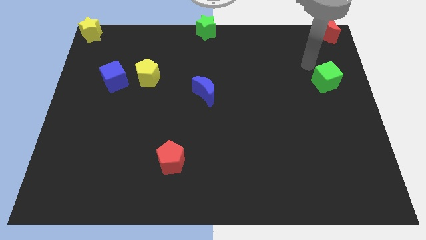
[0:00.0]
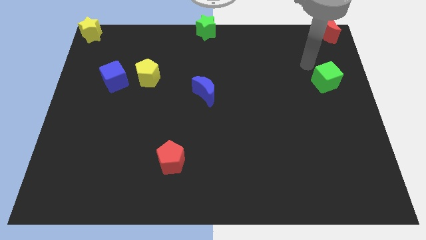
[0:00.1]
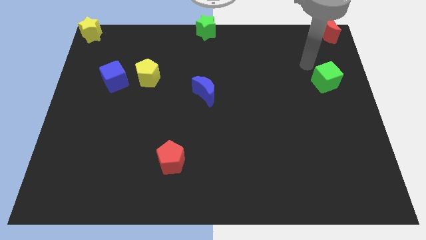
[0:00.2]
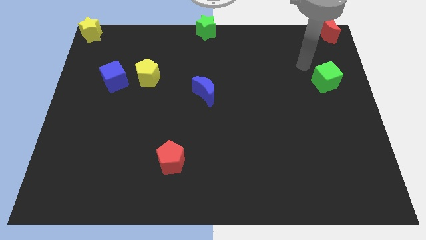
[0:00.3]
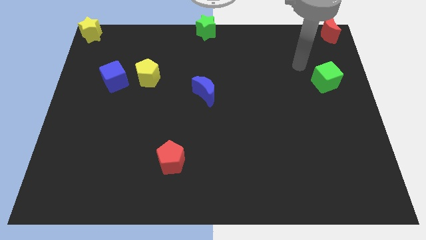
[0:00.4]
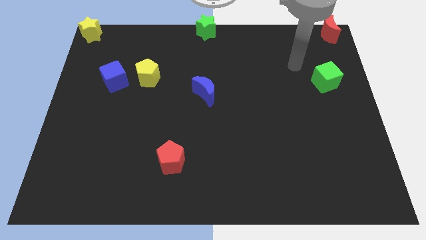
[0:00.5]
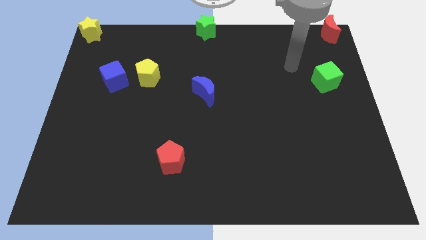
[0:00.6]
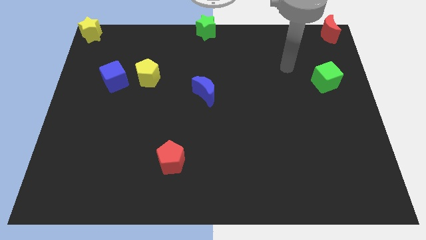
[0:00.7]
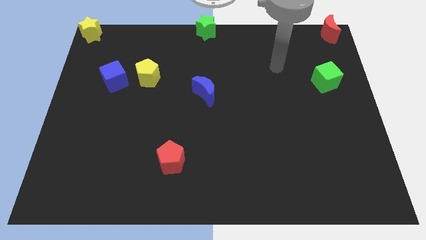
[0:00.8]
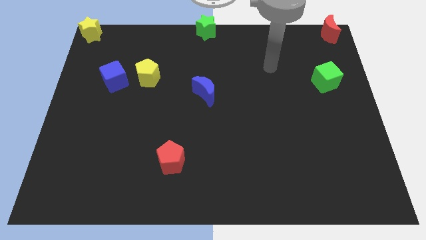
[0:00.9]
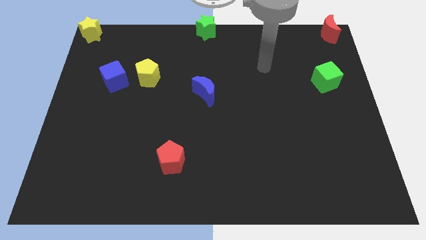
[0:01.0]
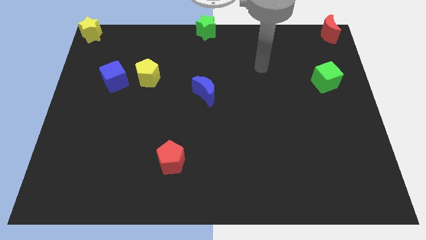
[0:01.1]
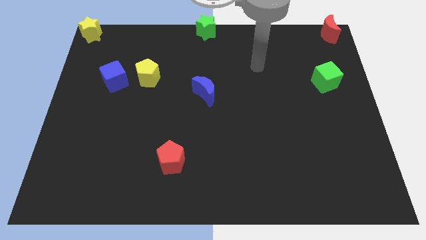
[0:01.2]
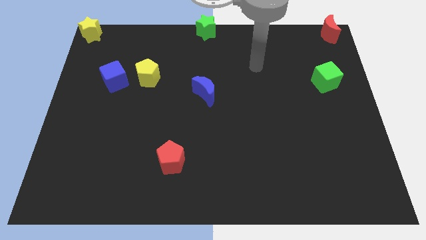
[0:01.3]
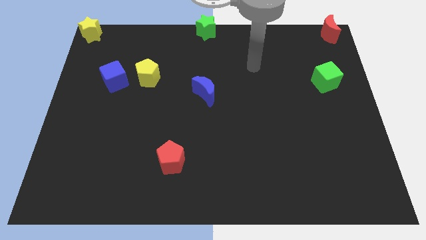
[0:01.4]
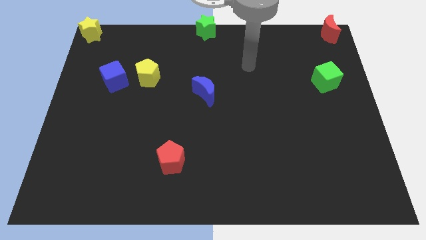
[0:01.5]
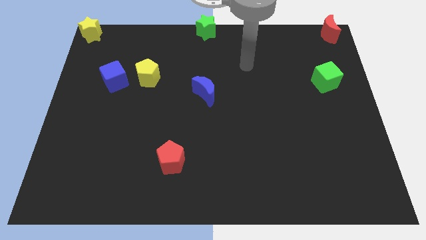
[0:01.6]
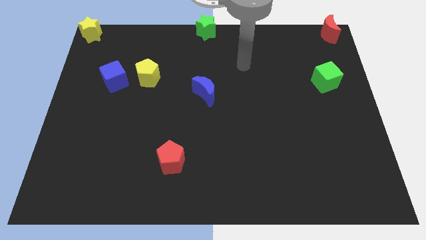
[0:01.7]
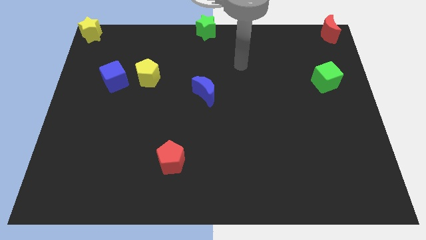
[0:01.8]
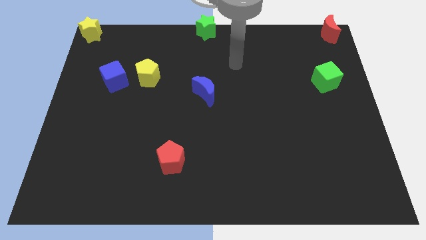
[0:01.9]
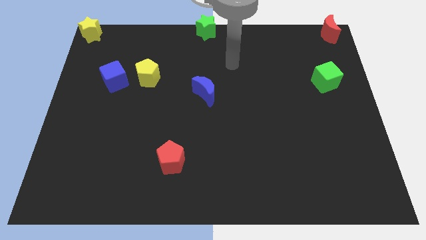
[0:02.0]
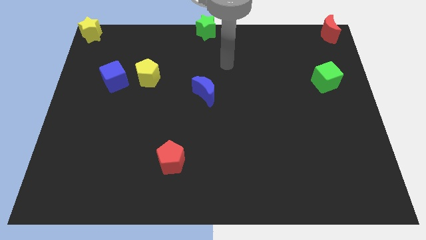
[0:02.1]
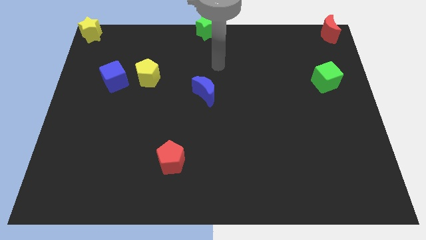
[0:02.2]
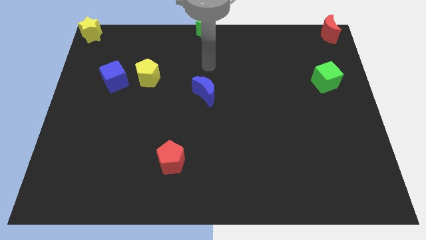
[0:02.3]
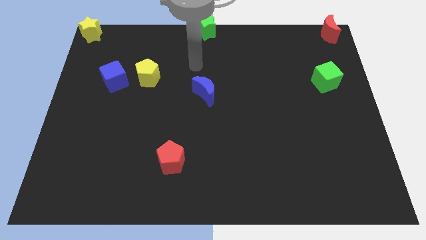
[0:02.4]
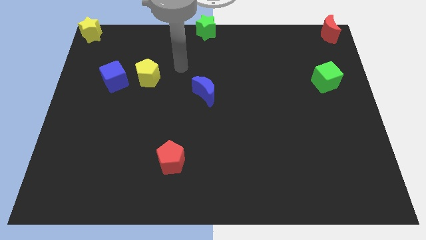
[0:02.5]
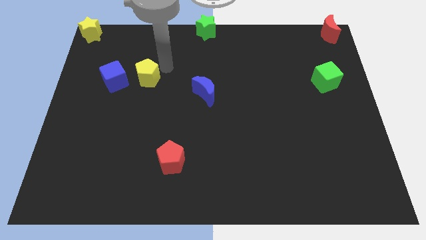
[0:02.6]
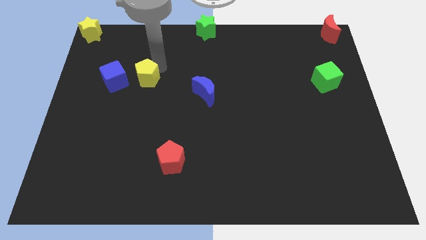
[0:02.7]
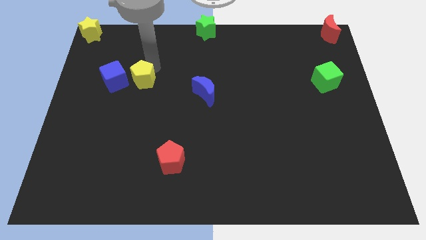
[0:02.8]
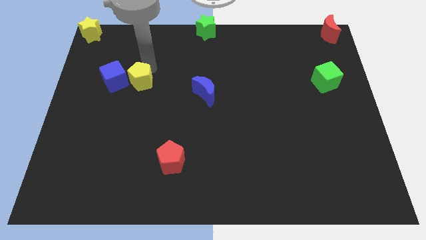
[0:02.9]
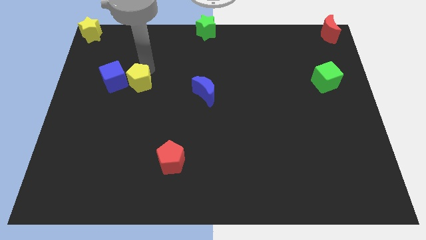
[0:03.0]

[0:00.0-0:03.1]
push yellow pentagon to blue cube

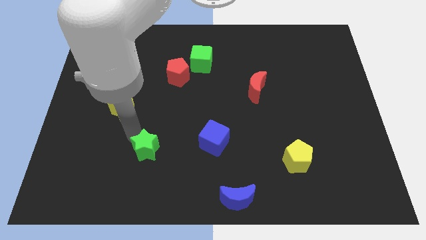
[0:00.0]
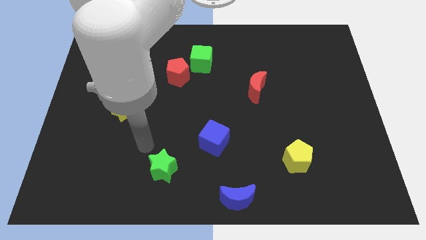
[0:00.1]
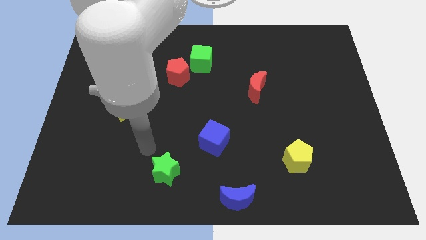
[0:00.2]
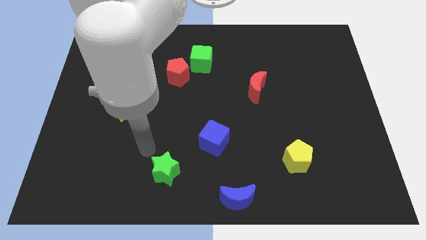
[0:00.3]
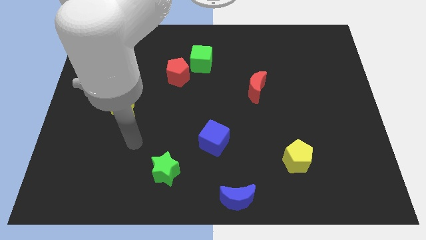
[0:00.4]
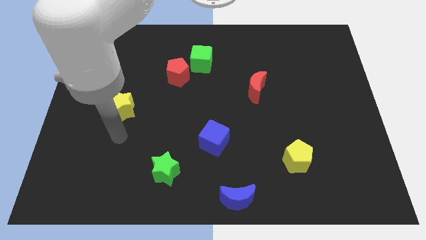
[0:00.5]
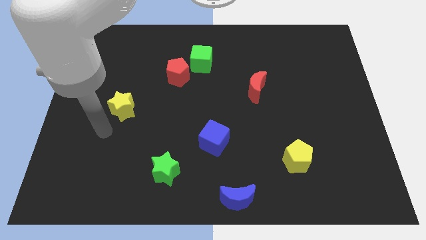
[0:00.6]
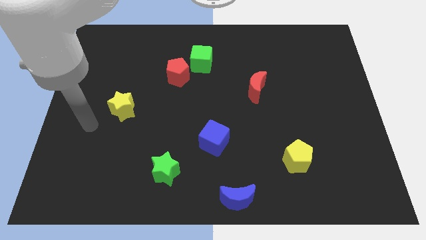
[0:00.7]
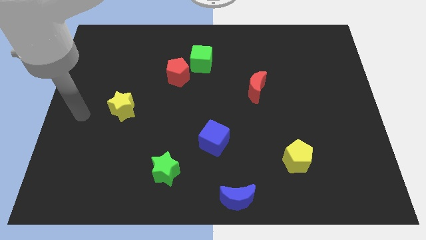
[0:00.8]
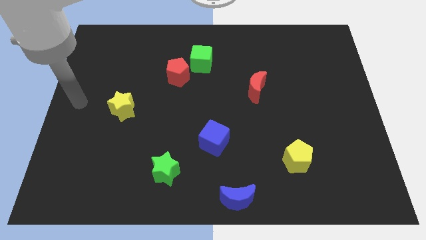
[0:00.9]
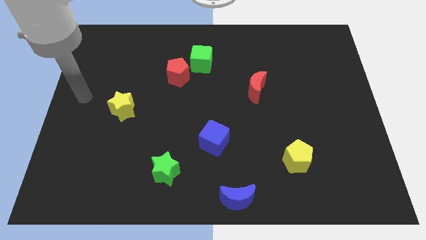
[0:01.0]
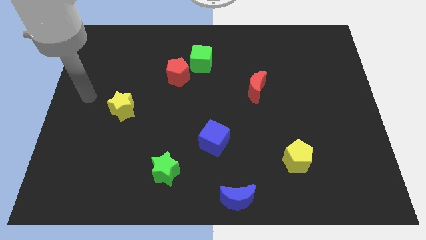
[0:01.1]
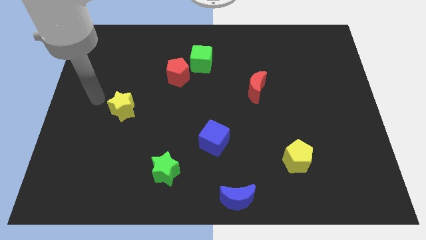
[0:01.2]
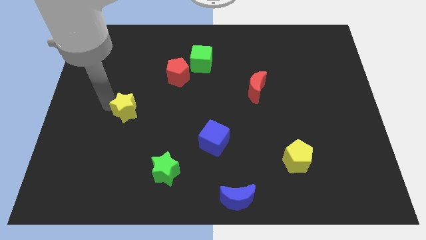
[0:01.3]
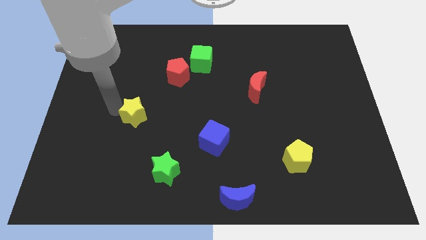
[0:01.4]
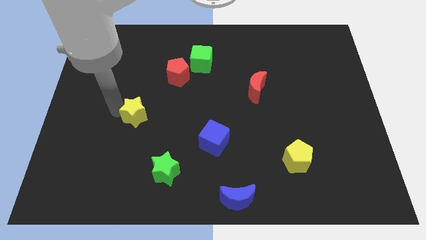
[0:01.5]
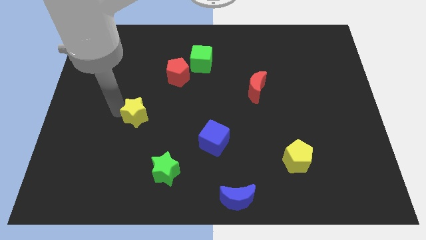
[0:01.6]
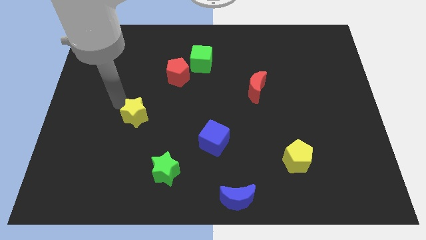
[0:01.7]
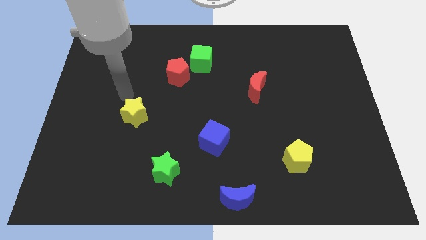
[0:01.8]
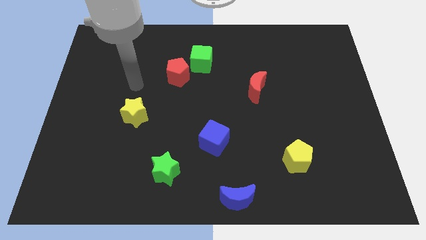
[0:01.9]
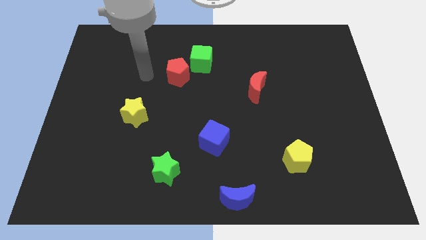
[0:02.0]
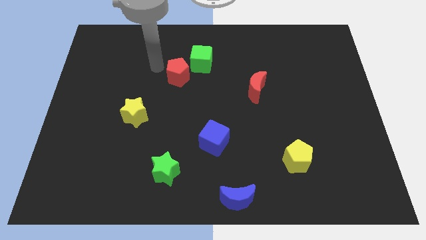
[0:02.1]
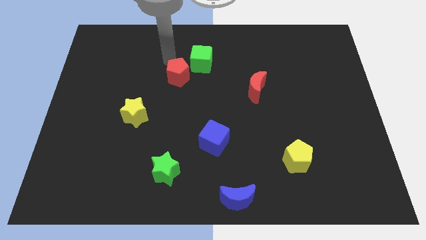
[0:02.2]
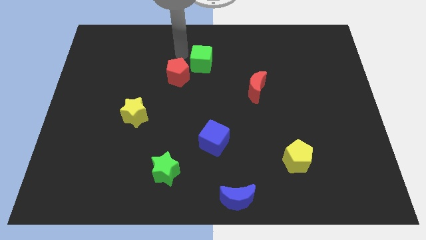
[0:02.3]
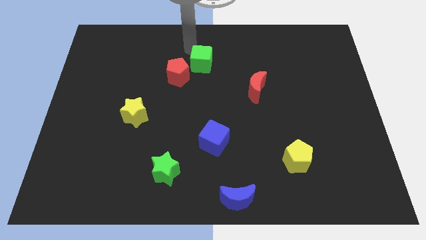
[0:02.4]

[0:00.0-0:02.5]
move yellow star slightly towards its bottom

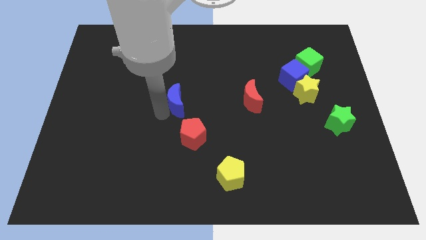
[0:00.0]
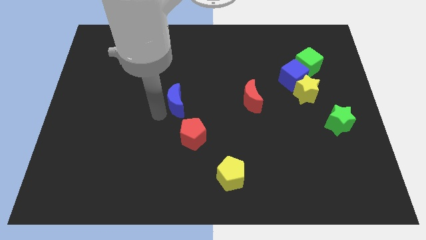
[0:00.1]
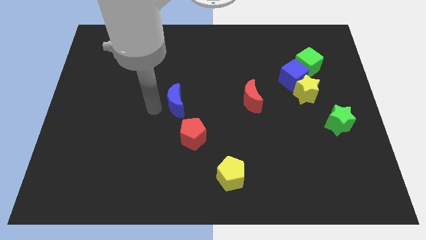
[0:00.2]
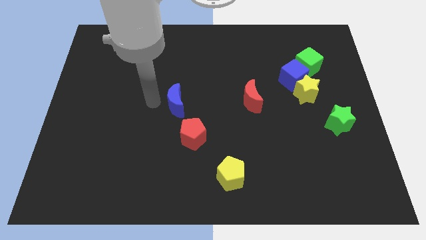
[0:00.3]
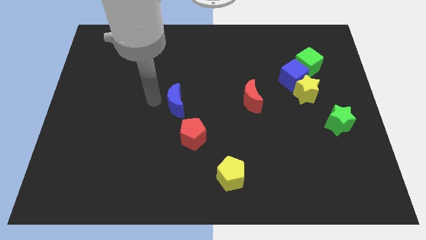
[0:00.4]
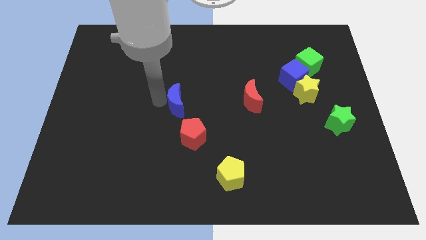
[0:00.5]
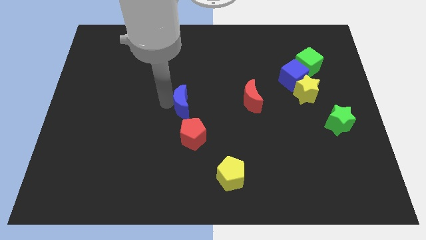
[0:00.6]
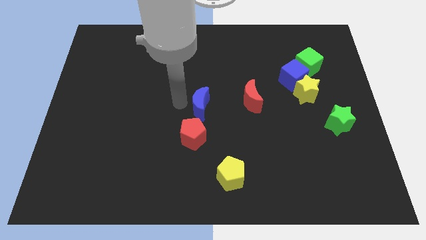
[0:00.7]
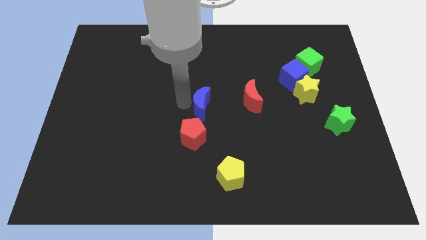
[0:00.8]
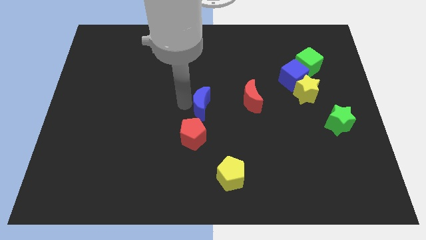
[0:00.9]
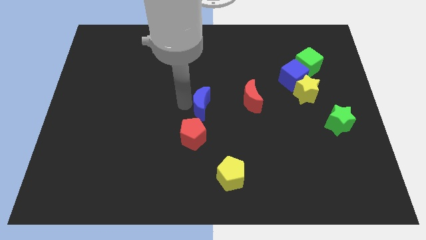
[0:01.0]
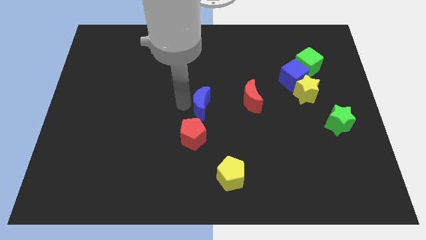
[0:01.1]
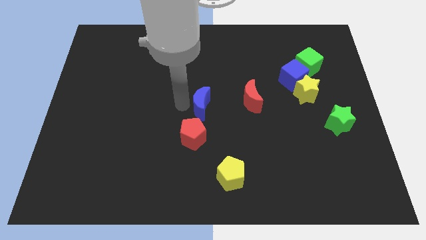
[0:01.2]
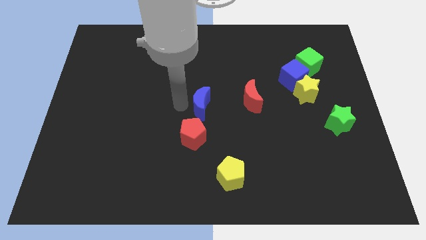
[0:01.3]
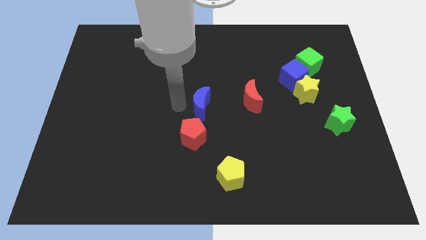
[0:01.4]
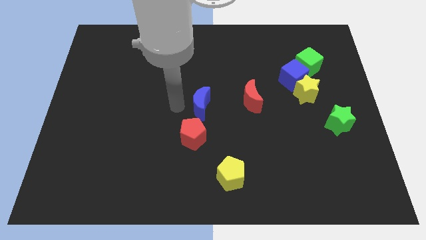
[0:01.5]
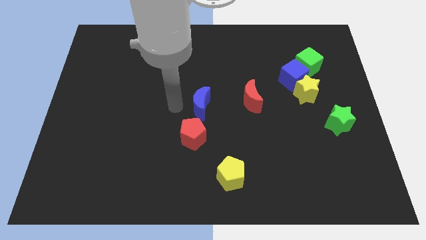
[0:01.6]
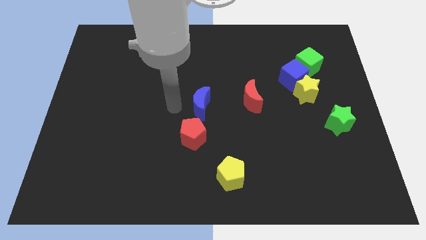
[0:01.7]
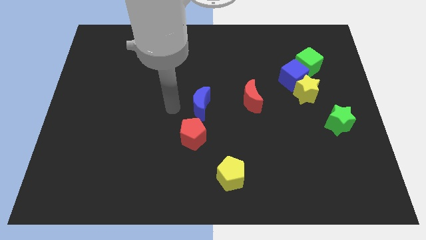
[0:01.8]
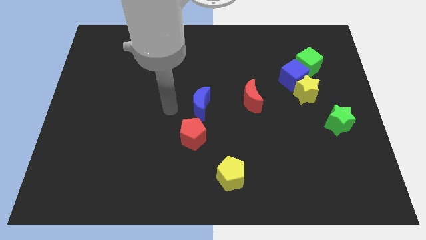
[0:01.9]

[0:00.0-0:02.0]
place the blue crescent on top of red pentagon

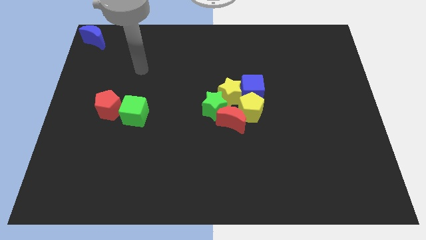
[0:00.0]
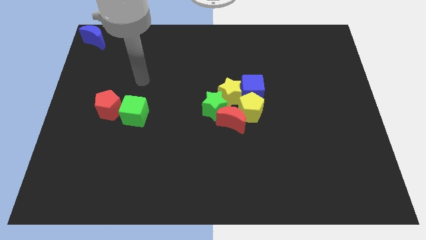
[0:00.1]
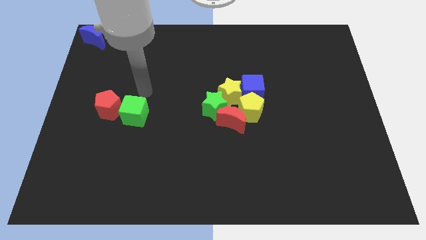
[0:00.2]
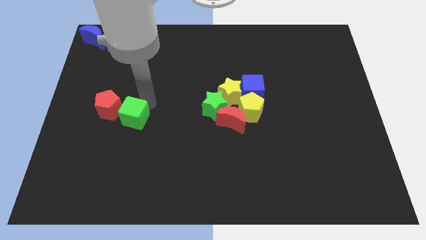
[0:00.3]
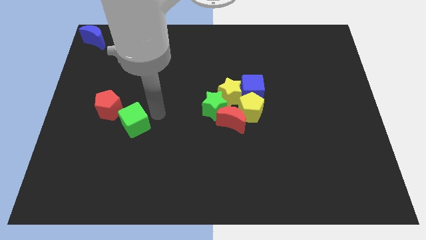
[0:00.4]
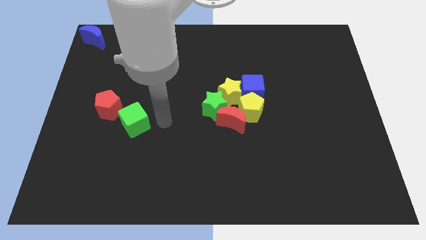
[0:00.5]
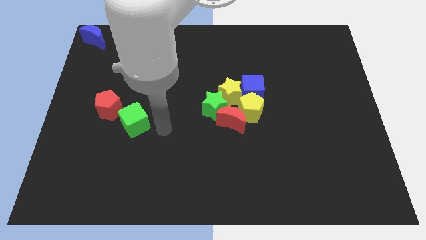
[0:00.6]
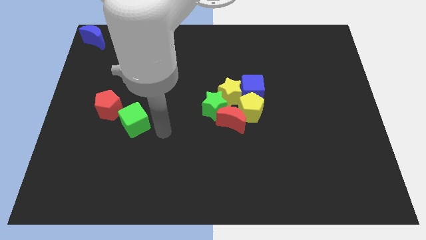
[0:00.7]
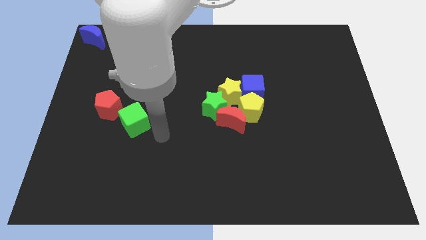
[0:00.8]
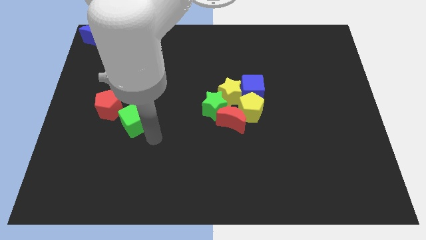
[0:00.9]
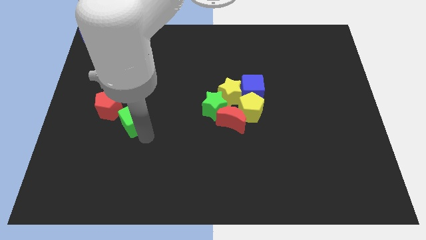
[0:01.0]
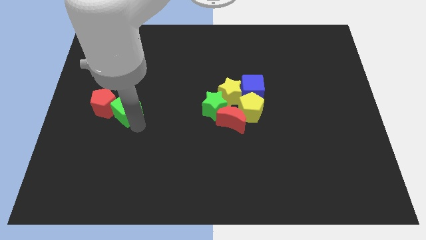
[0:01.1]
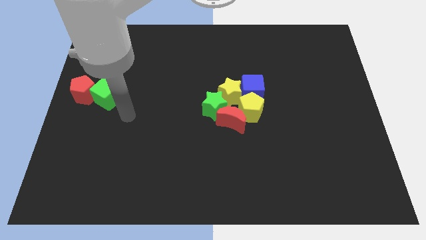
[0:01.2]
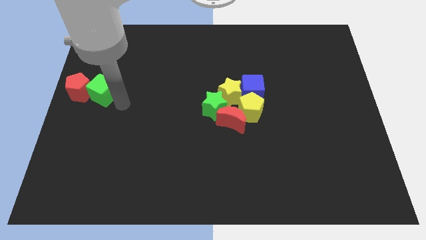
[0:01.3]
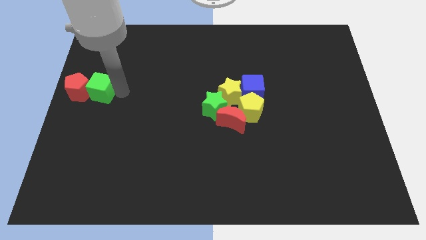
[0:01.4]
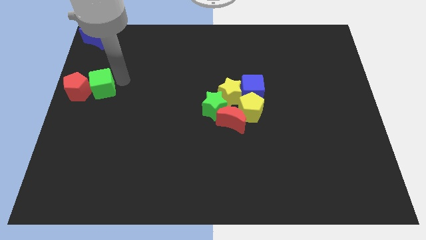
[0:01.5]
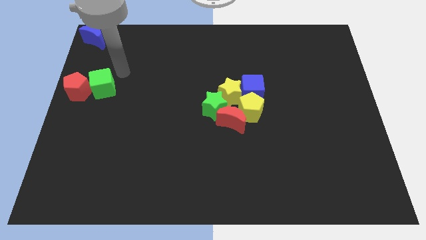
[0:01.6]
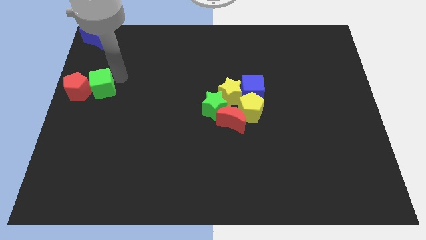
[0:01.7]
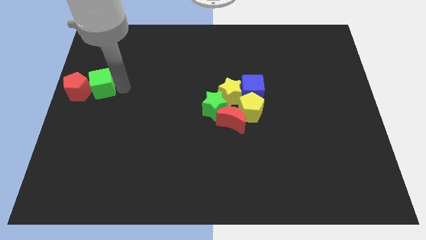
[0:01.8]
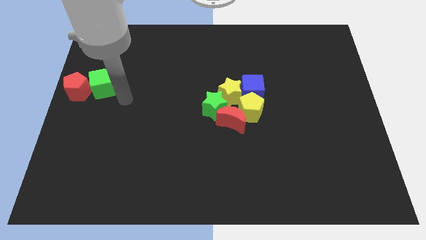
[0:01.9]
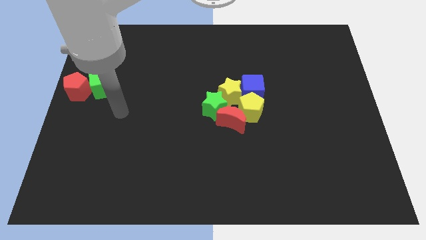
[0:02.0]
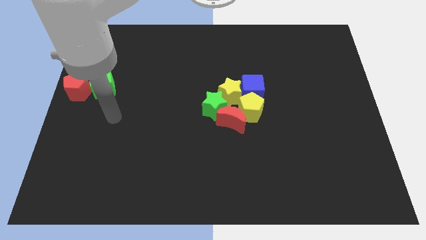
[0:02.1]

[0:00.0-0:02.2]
move the green cube and red pentagon towards the left side
